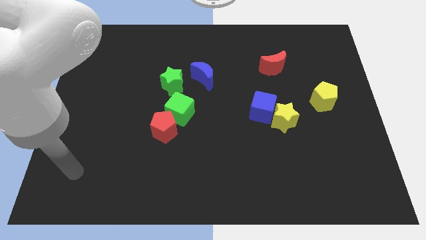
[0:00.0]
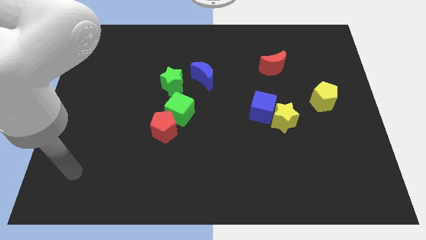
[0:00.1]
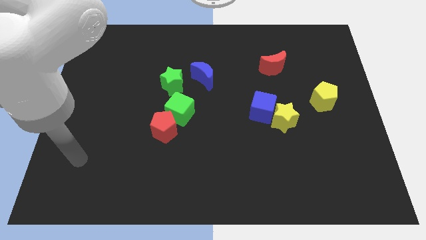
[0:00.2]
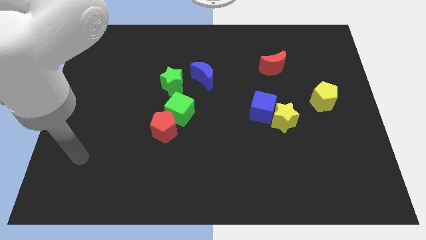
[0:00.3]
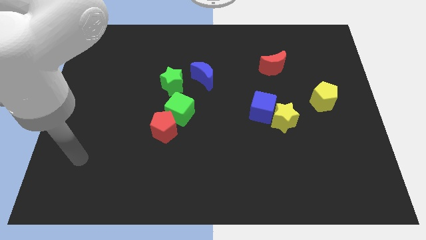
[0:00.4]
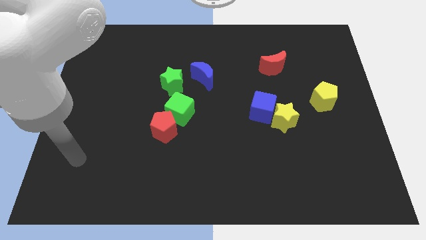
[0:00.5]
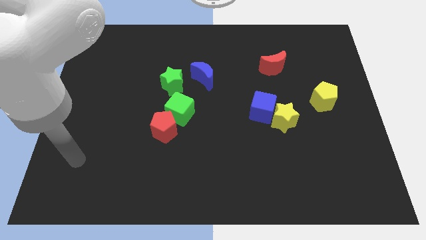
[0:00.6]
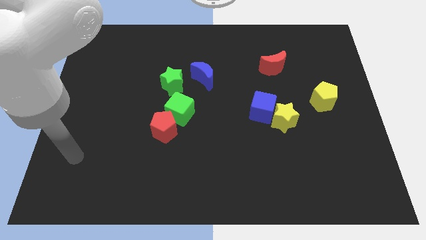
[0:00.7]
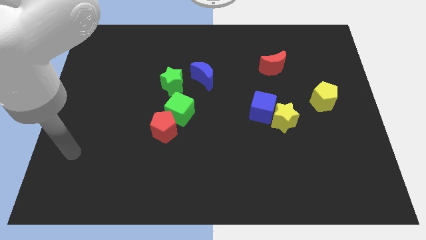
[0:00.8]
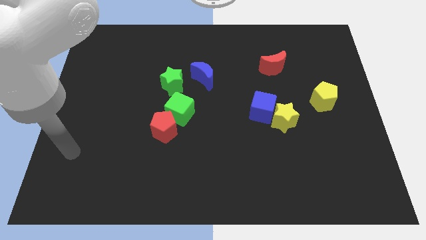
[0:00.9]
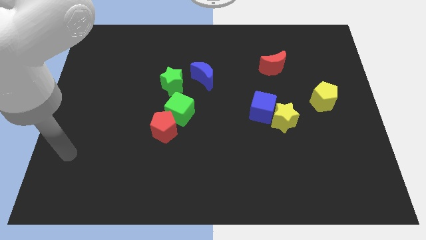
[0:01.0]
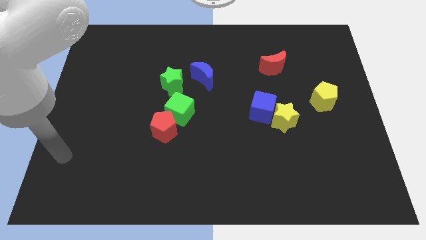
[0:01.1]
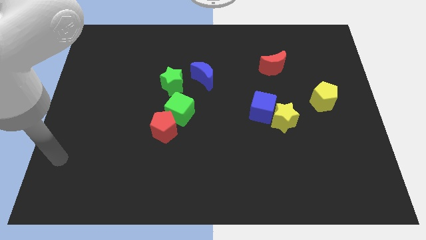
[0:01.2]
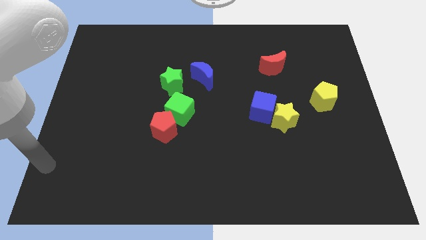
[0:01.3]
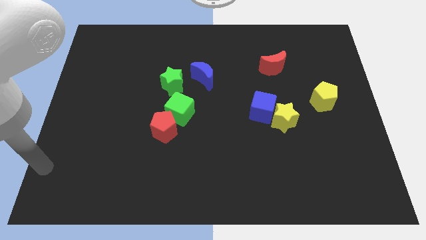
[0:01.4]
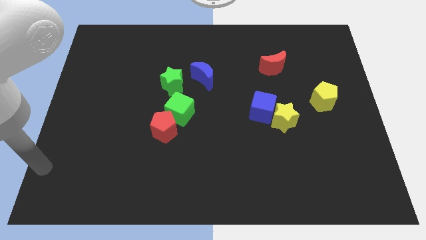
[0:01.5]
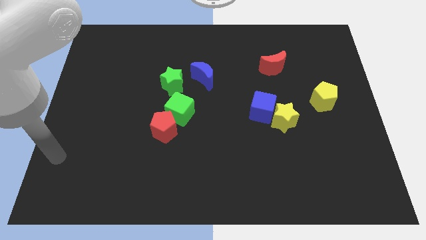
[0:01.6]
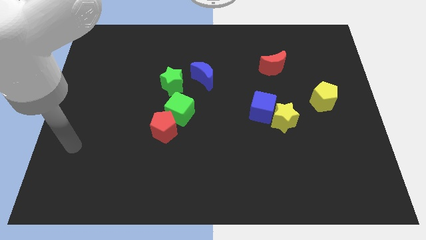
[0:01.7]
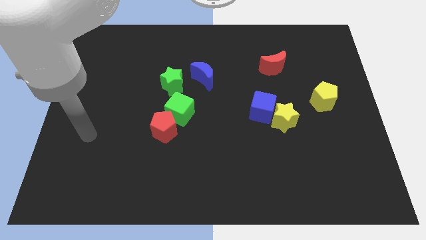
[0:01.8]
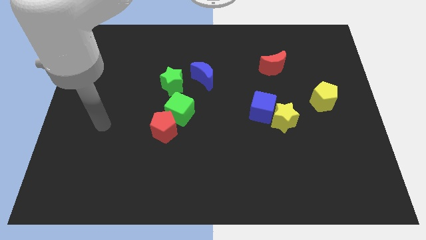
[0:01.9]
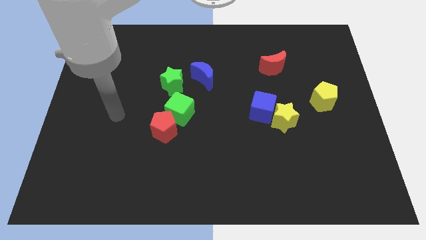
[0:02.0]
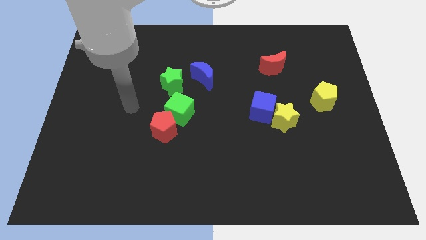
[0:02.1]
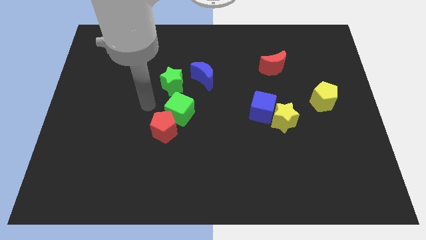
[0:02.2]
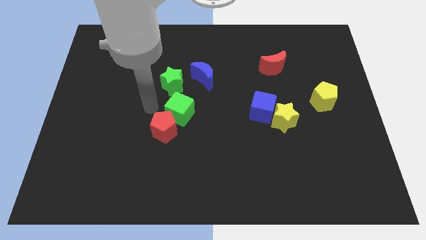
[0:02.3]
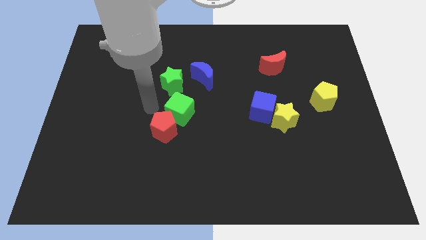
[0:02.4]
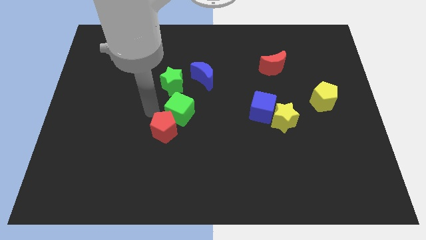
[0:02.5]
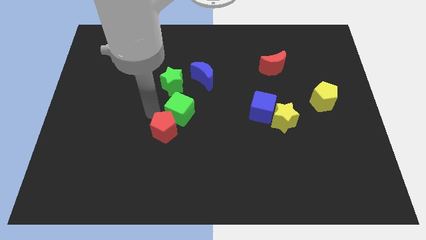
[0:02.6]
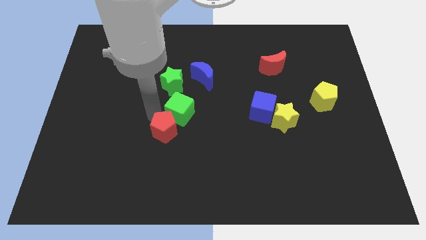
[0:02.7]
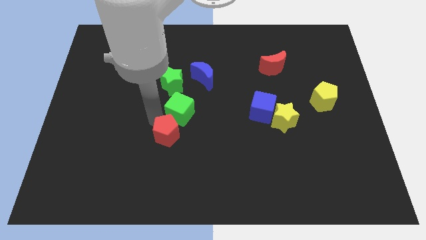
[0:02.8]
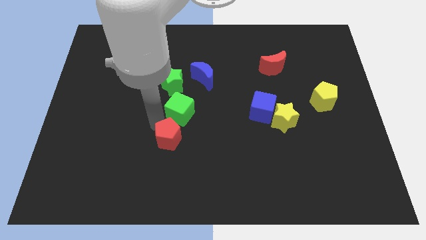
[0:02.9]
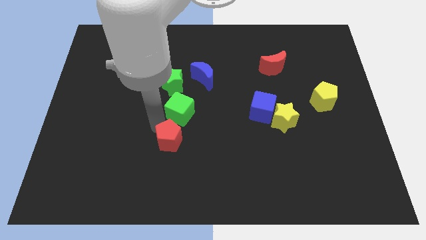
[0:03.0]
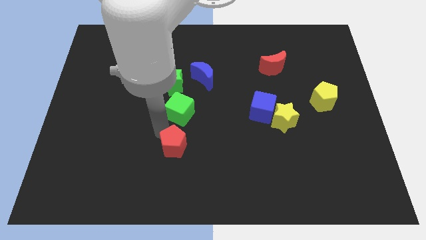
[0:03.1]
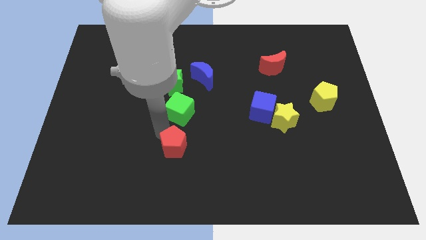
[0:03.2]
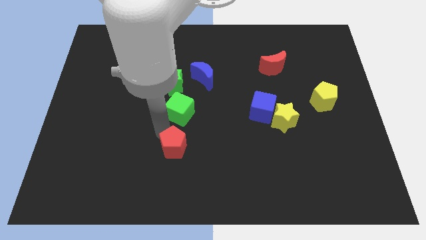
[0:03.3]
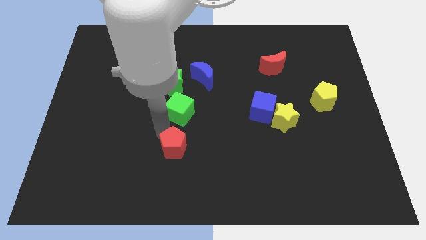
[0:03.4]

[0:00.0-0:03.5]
push red crescent slightly towards down

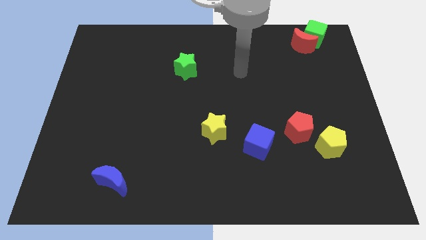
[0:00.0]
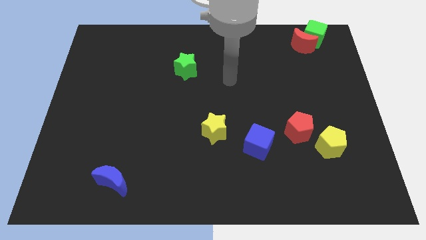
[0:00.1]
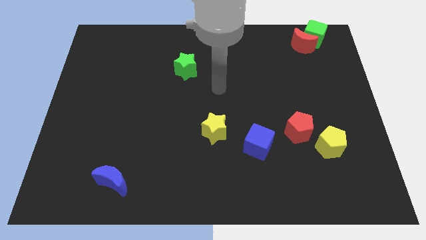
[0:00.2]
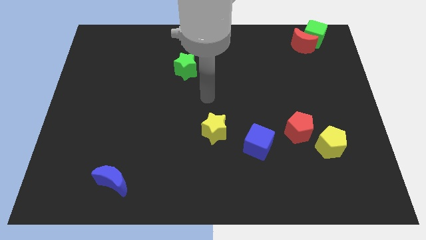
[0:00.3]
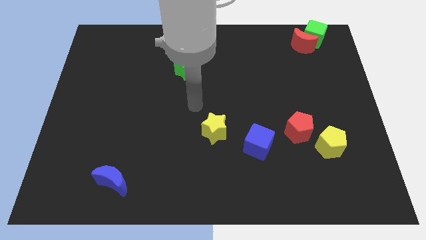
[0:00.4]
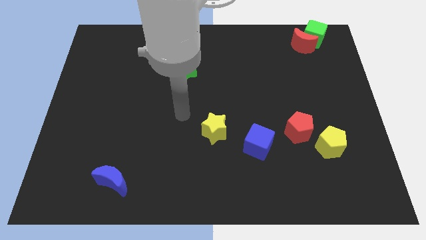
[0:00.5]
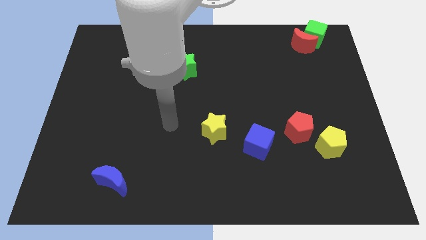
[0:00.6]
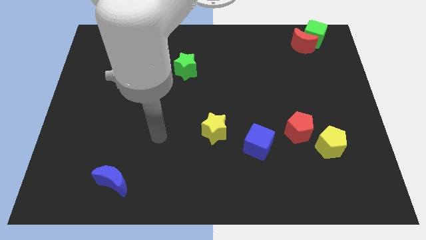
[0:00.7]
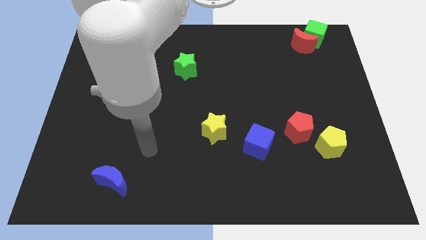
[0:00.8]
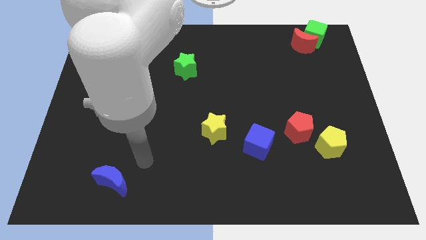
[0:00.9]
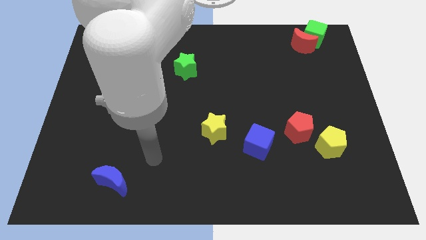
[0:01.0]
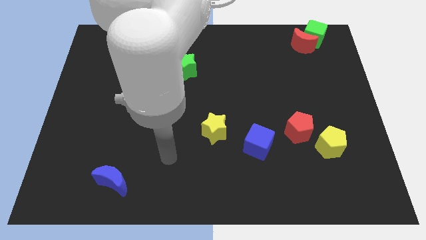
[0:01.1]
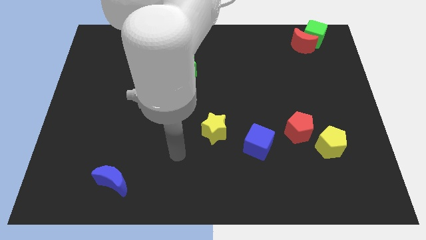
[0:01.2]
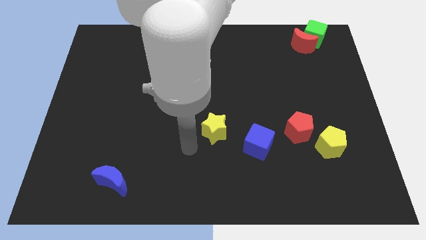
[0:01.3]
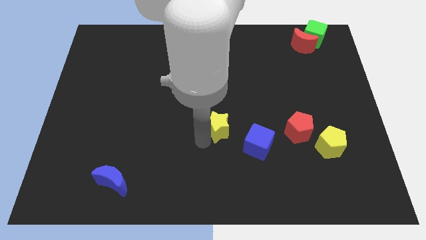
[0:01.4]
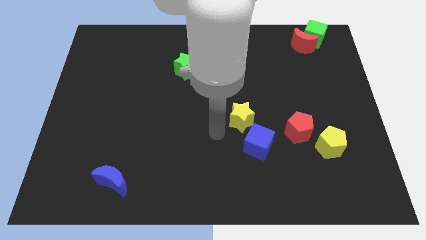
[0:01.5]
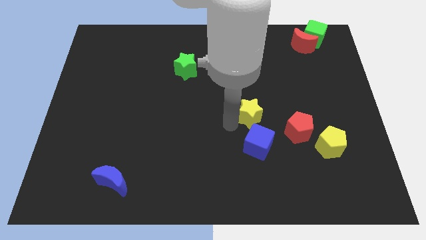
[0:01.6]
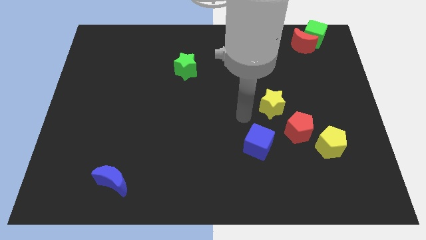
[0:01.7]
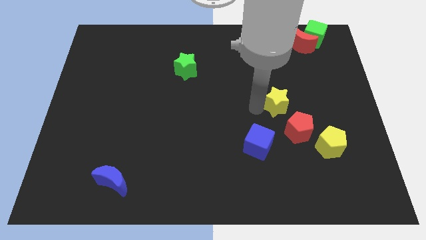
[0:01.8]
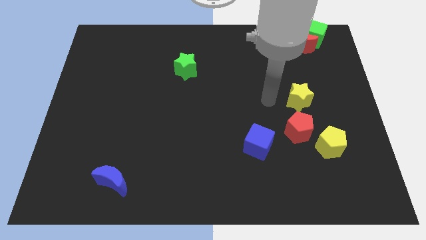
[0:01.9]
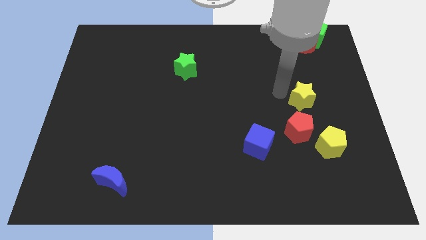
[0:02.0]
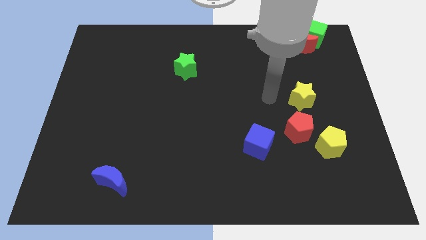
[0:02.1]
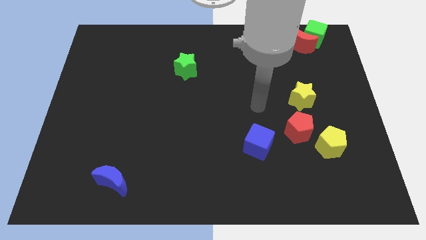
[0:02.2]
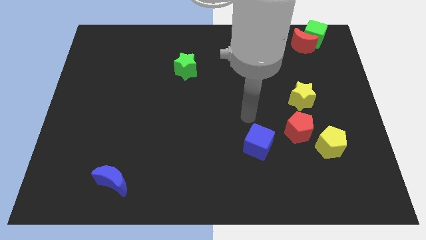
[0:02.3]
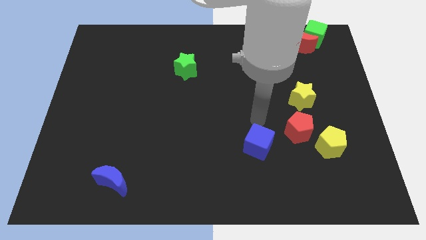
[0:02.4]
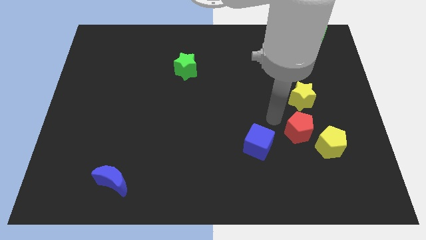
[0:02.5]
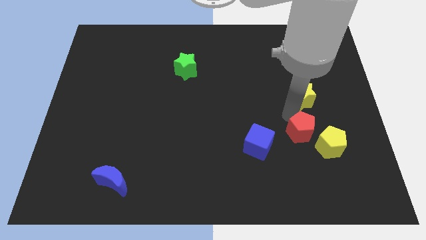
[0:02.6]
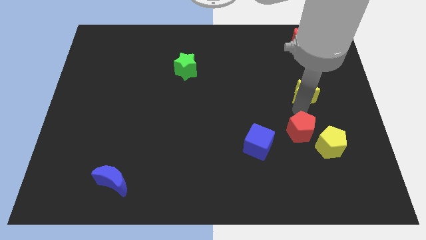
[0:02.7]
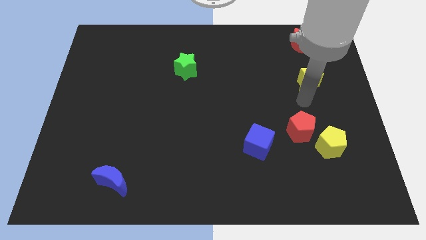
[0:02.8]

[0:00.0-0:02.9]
place the yellow star above the red moon

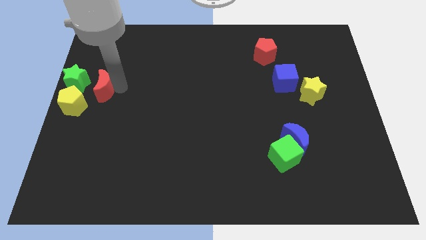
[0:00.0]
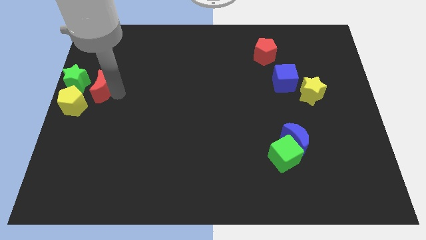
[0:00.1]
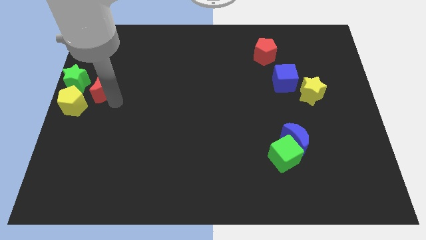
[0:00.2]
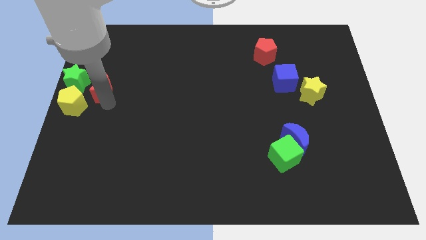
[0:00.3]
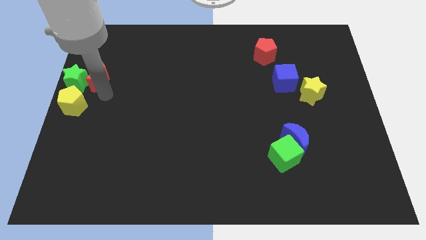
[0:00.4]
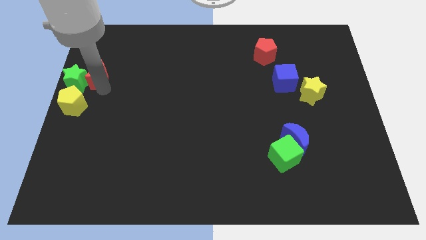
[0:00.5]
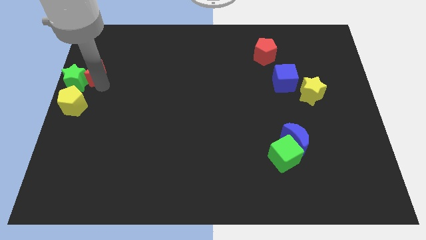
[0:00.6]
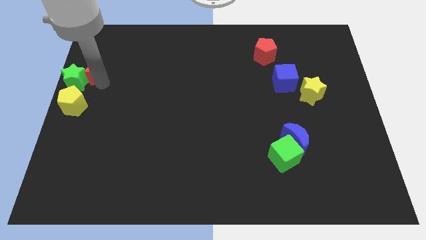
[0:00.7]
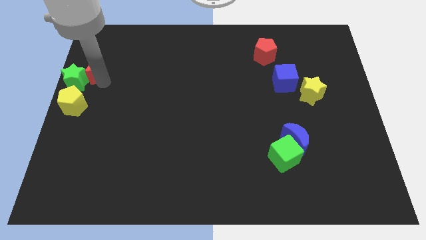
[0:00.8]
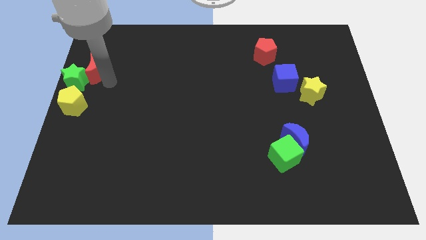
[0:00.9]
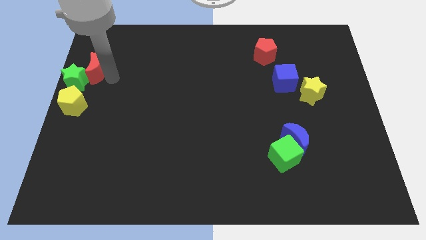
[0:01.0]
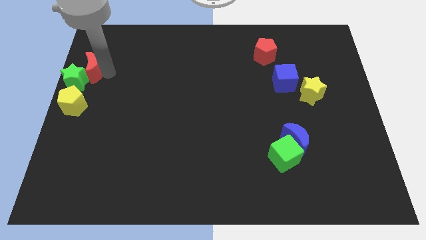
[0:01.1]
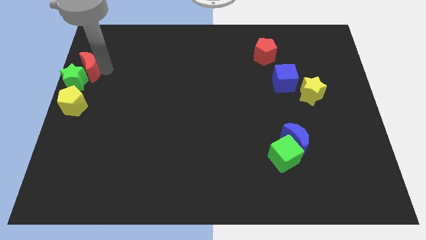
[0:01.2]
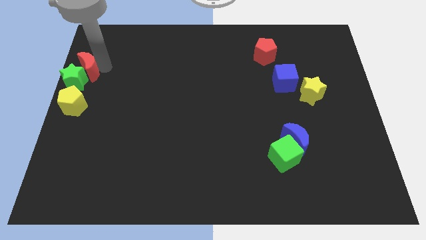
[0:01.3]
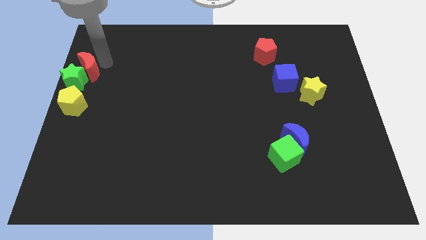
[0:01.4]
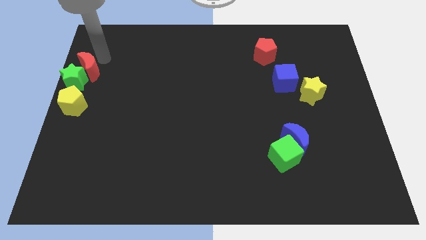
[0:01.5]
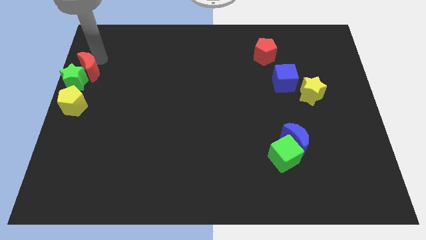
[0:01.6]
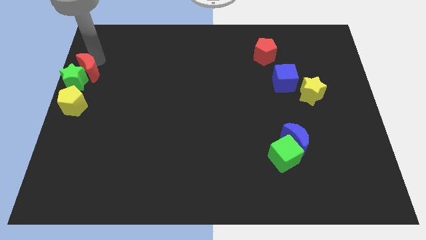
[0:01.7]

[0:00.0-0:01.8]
push the red crescent into the green star

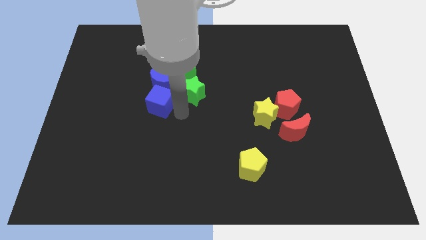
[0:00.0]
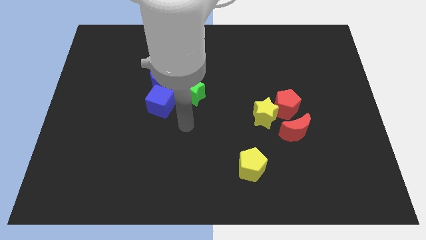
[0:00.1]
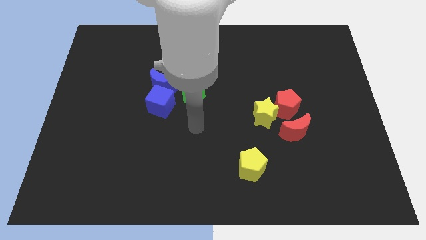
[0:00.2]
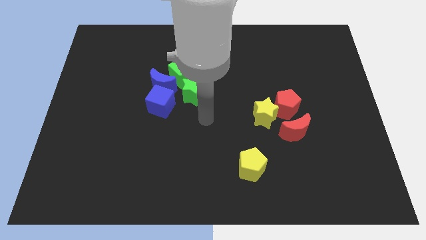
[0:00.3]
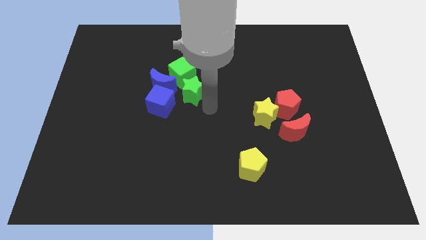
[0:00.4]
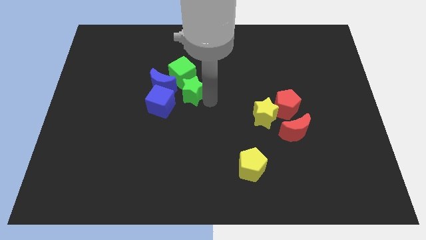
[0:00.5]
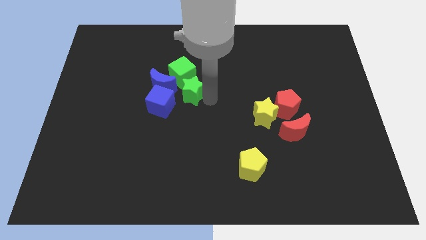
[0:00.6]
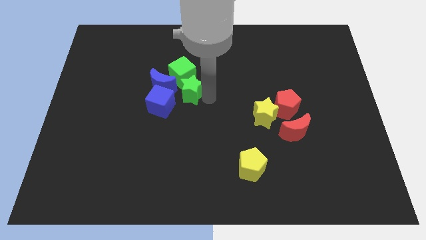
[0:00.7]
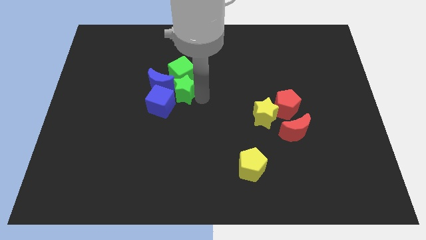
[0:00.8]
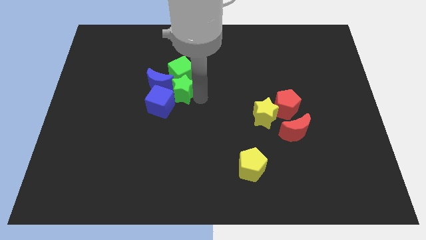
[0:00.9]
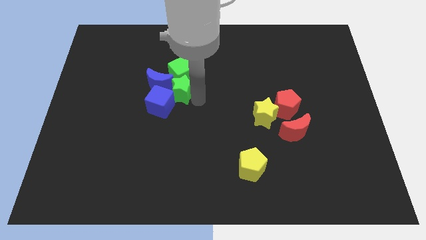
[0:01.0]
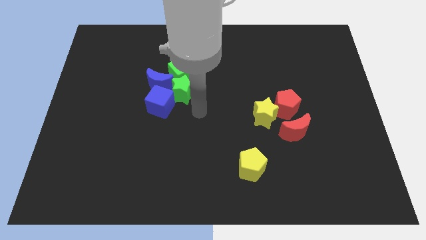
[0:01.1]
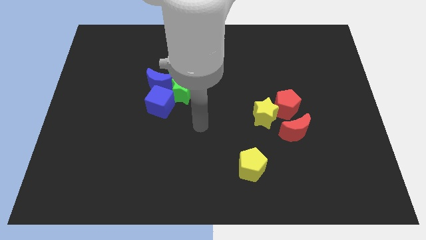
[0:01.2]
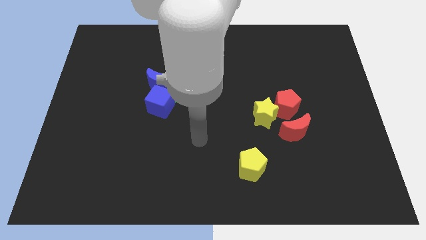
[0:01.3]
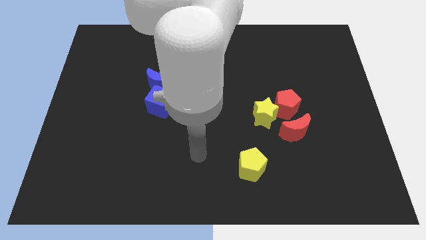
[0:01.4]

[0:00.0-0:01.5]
move the green star into the blue crescent
